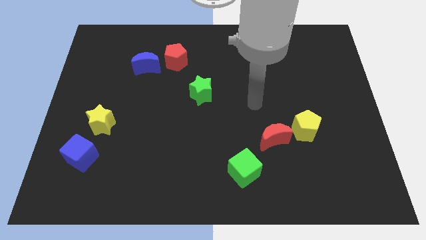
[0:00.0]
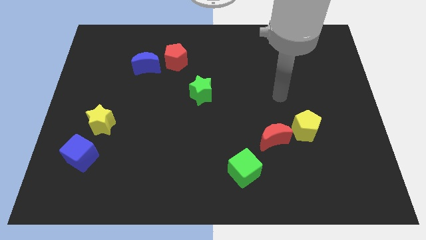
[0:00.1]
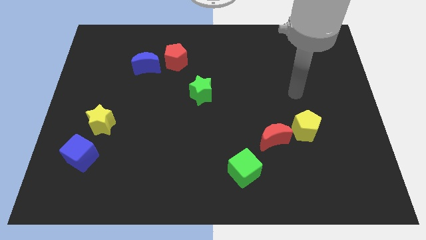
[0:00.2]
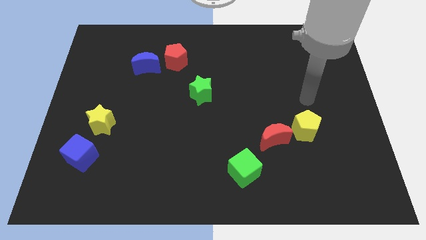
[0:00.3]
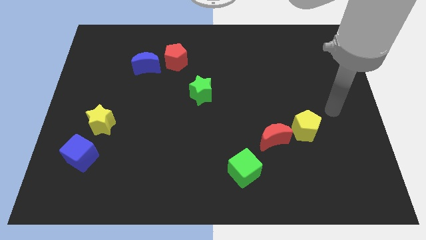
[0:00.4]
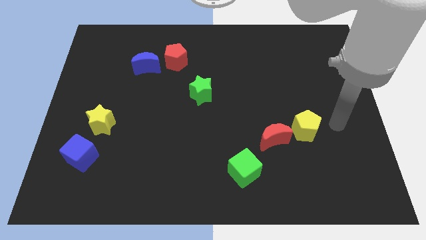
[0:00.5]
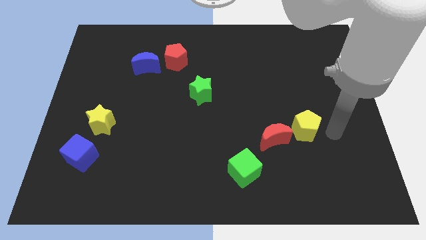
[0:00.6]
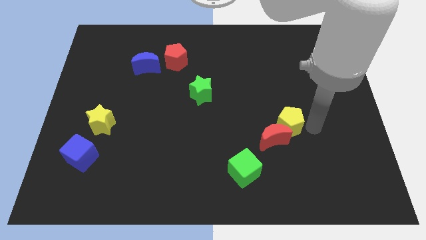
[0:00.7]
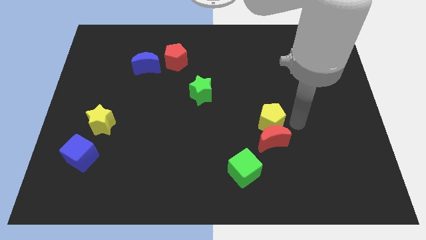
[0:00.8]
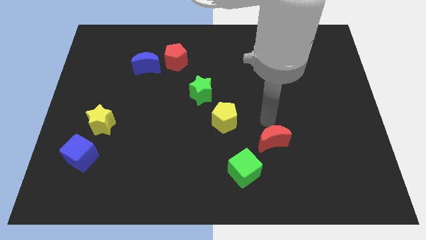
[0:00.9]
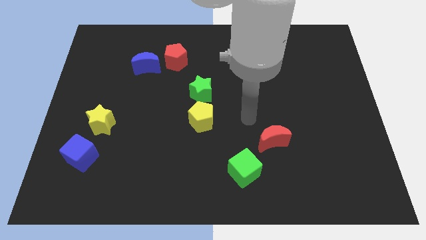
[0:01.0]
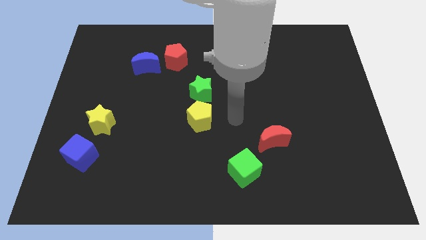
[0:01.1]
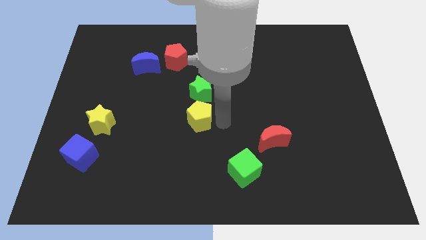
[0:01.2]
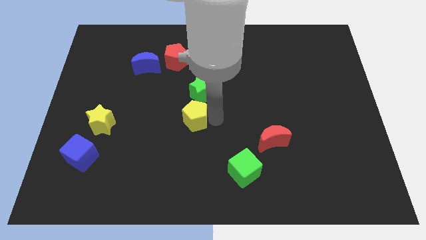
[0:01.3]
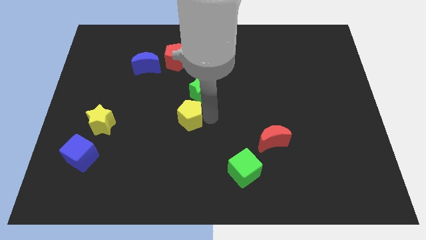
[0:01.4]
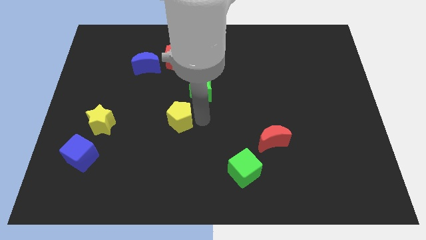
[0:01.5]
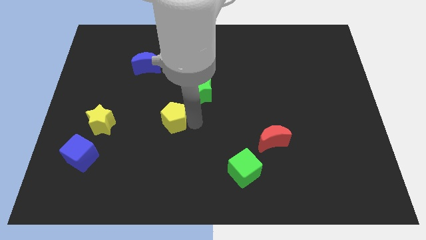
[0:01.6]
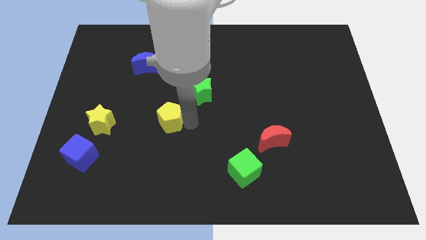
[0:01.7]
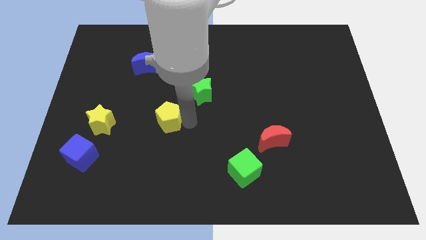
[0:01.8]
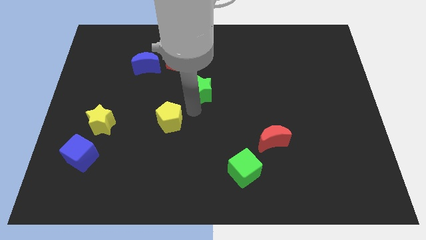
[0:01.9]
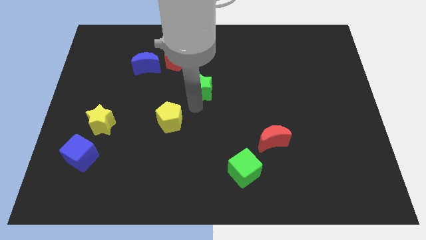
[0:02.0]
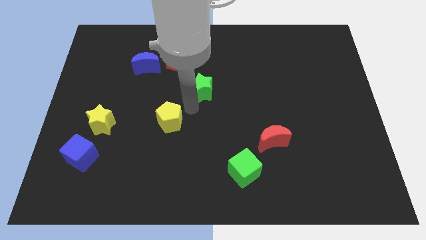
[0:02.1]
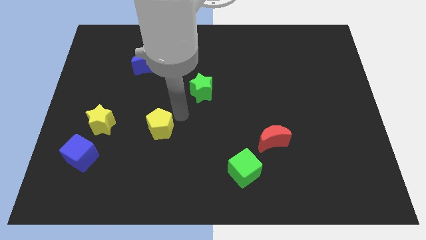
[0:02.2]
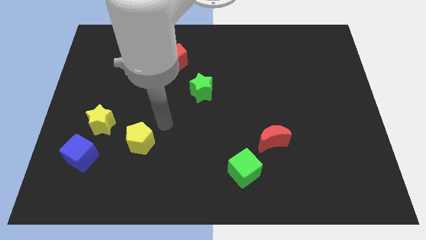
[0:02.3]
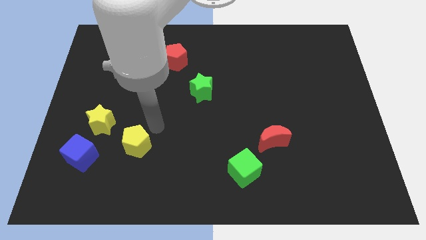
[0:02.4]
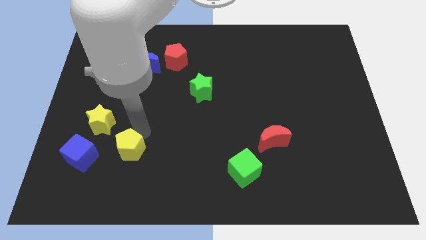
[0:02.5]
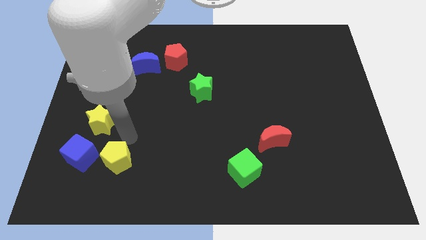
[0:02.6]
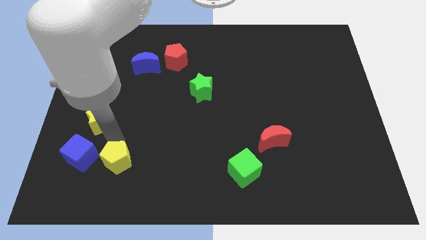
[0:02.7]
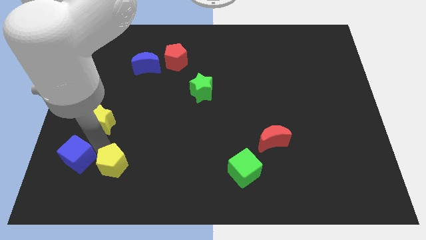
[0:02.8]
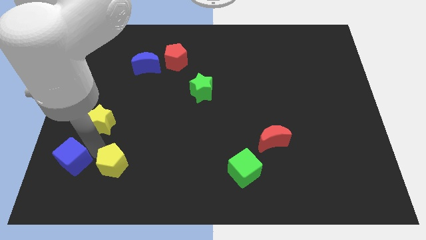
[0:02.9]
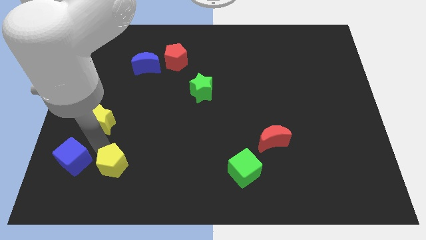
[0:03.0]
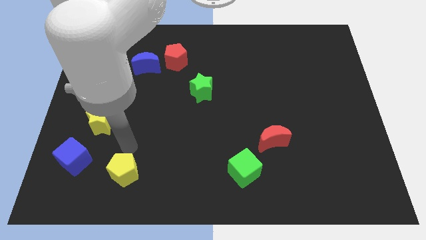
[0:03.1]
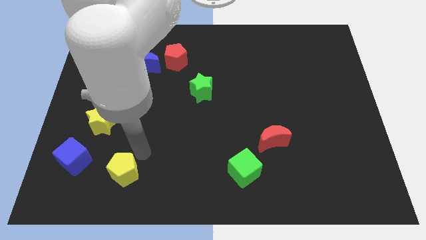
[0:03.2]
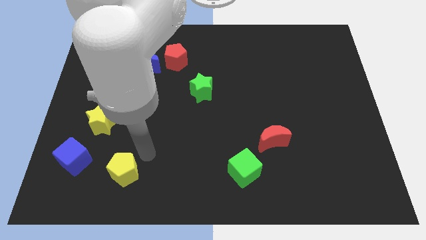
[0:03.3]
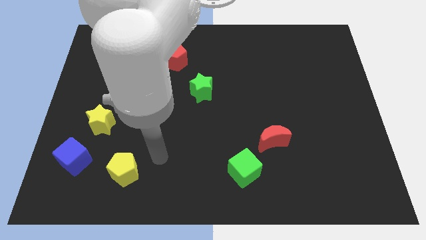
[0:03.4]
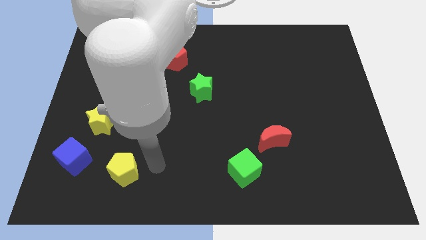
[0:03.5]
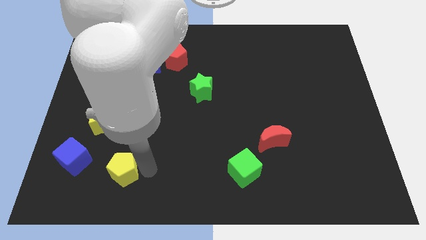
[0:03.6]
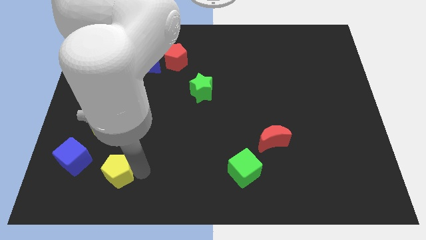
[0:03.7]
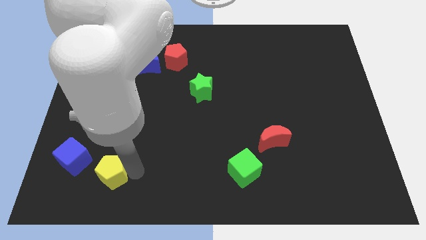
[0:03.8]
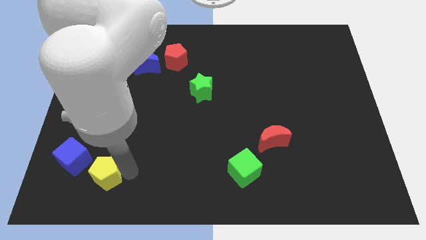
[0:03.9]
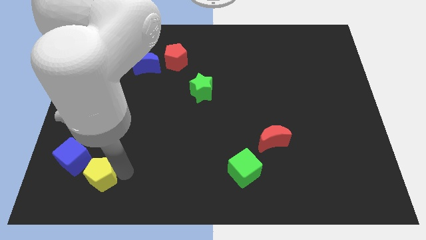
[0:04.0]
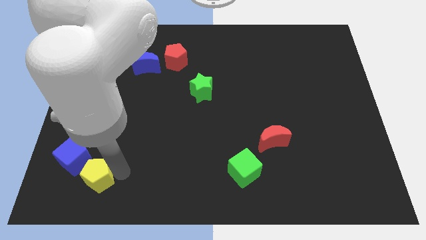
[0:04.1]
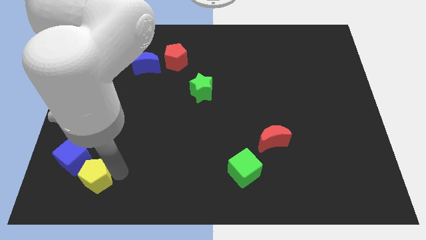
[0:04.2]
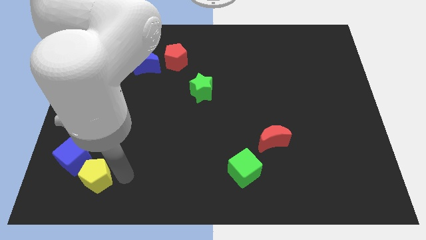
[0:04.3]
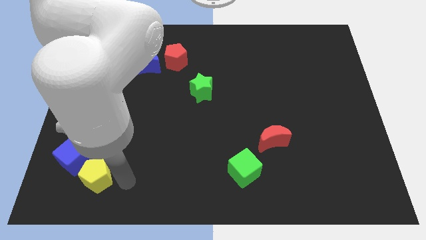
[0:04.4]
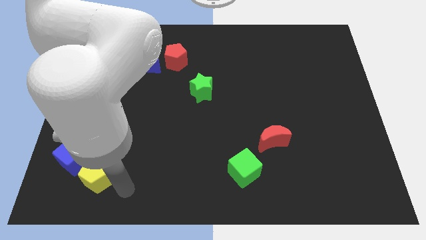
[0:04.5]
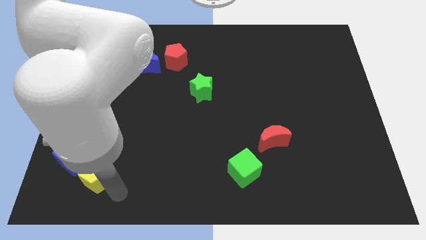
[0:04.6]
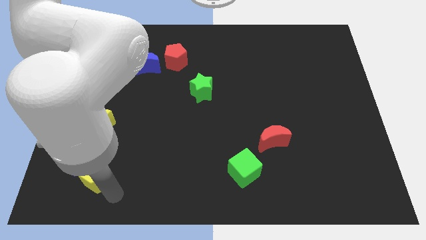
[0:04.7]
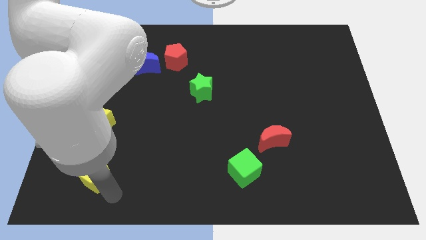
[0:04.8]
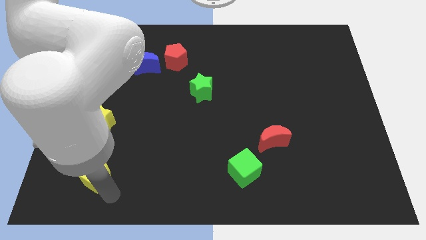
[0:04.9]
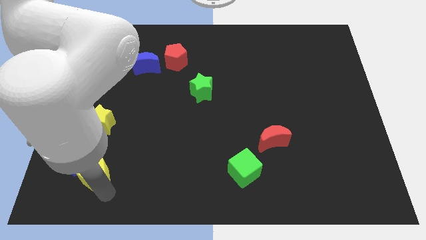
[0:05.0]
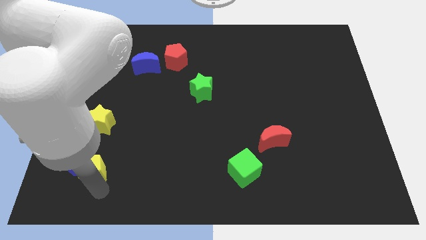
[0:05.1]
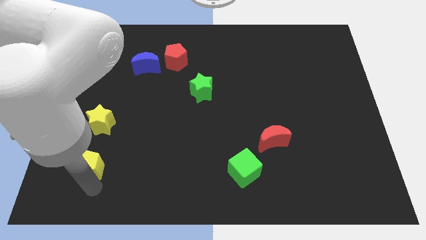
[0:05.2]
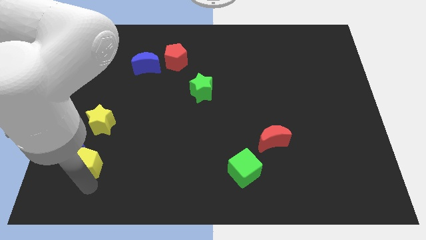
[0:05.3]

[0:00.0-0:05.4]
put the yellow pentagon to the blue cube

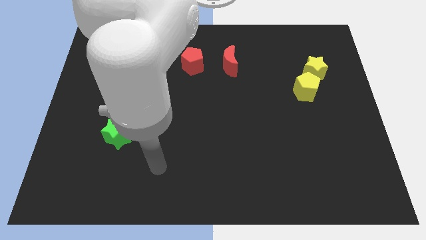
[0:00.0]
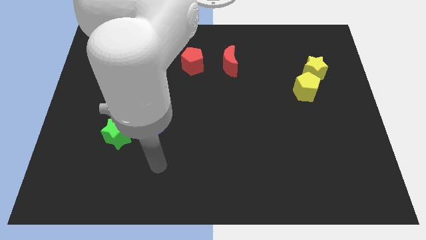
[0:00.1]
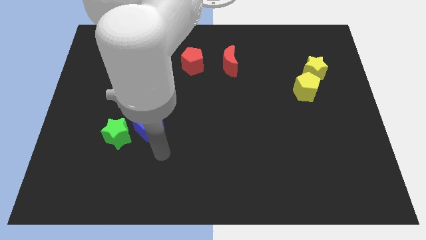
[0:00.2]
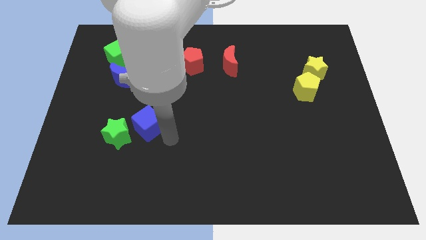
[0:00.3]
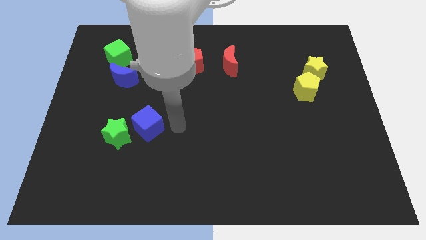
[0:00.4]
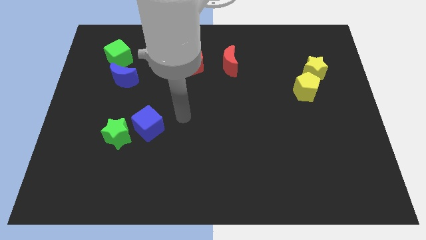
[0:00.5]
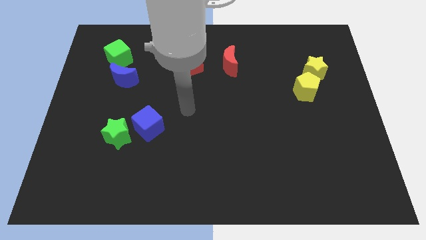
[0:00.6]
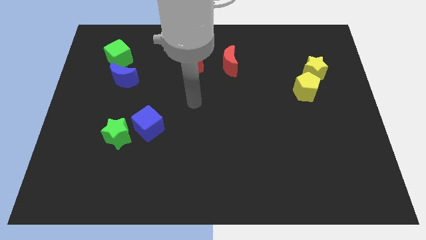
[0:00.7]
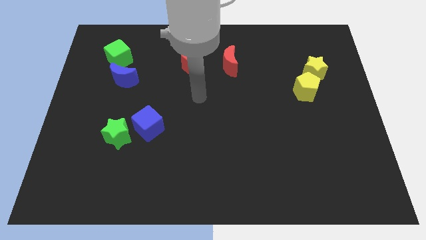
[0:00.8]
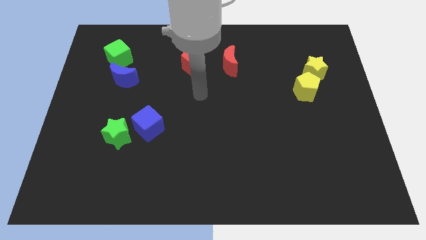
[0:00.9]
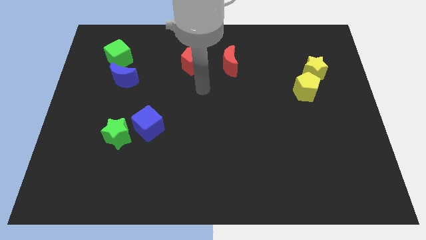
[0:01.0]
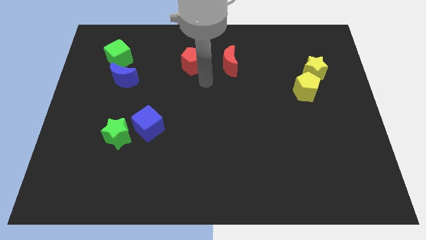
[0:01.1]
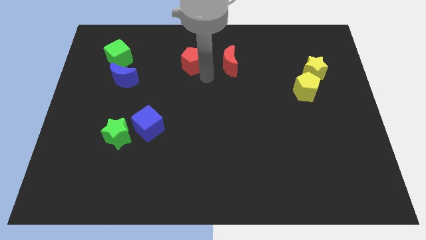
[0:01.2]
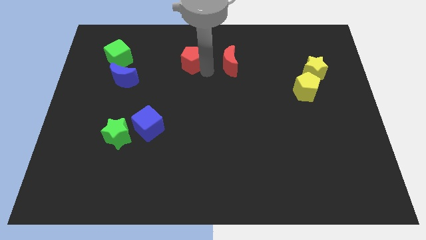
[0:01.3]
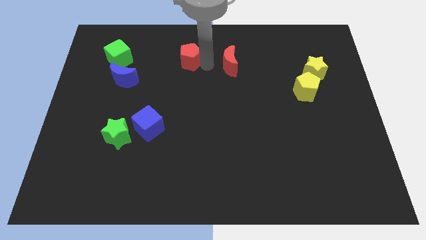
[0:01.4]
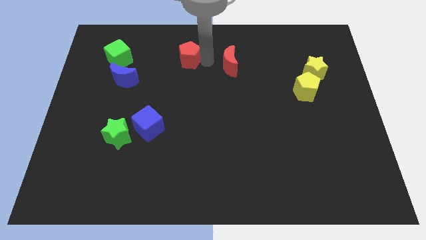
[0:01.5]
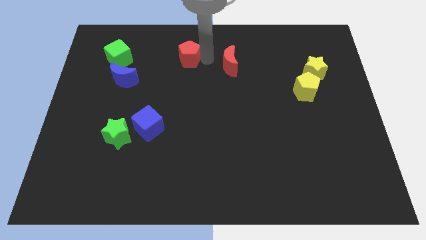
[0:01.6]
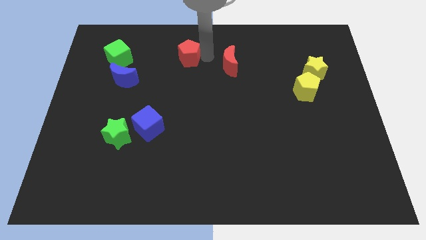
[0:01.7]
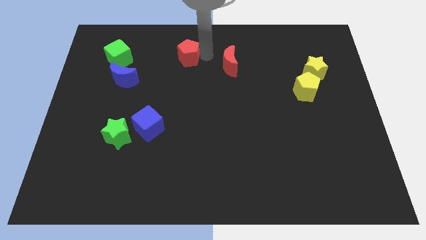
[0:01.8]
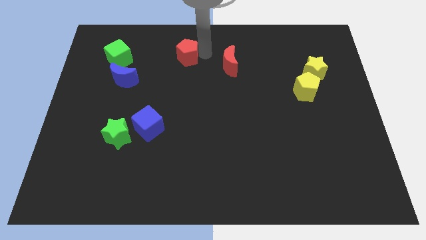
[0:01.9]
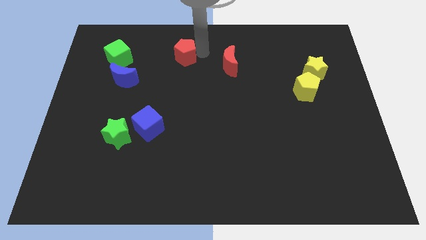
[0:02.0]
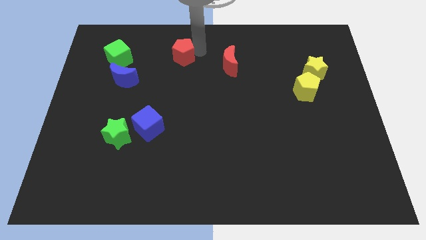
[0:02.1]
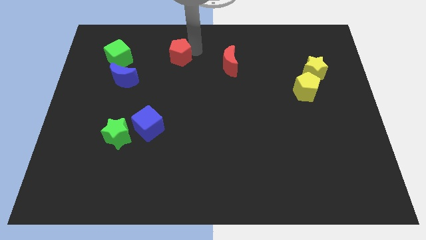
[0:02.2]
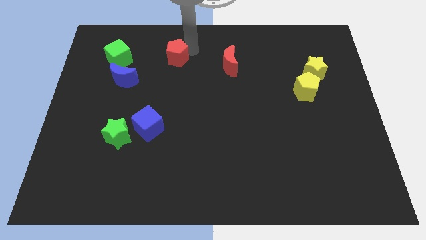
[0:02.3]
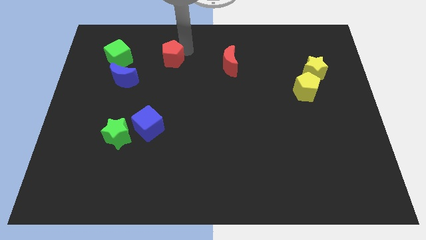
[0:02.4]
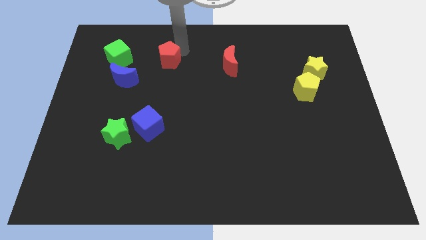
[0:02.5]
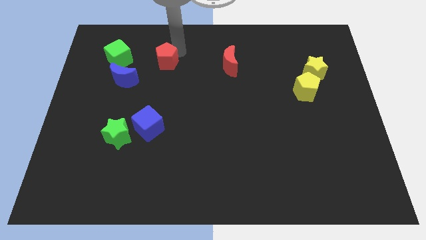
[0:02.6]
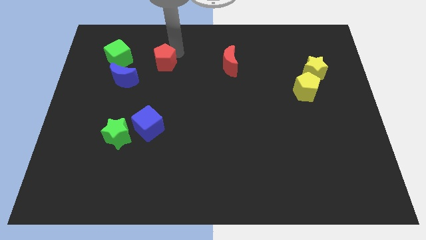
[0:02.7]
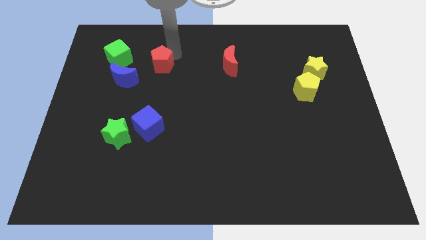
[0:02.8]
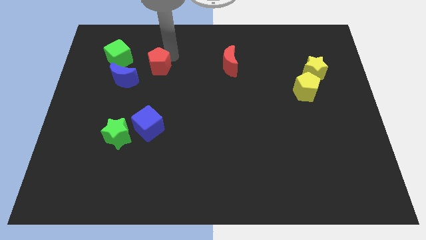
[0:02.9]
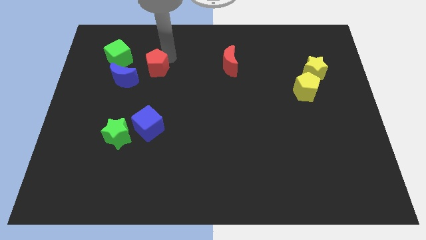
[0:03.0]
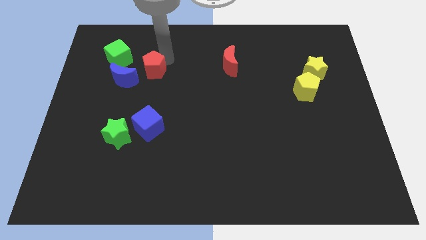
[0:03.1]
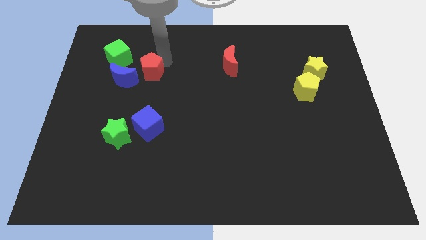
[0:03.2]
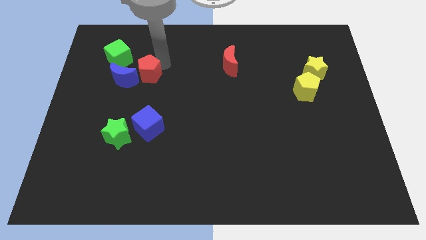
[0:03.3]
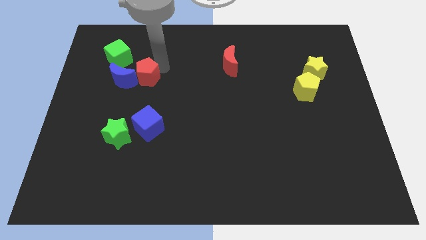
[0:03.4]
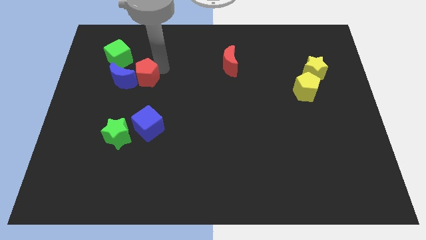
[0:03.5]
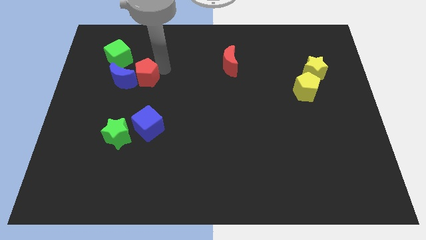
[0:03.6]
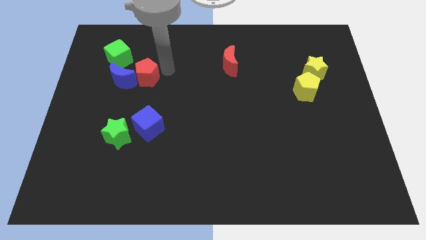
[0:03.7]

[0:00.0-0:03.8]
push the red pentagon next to the blue moon
